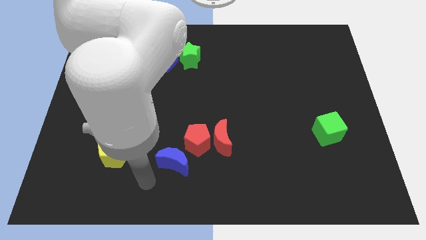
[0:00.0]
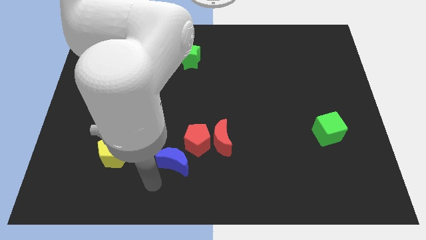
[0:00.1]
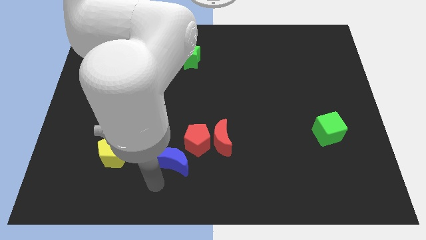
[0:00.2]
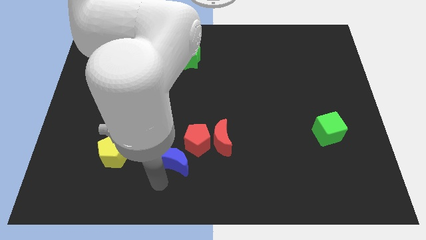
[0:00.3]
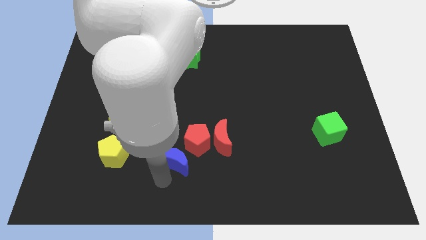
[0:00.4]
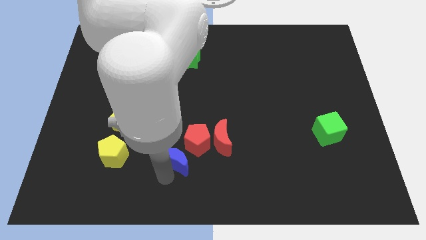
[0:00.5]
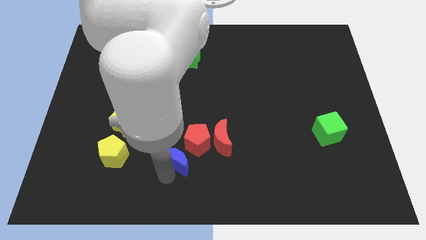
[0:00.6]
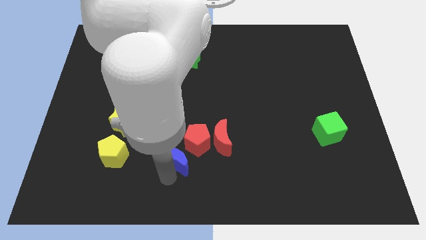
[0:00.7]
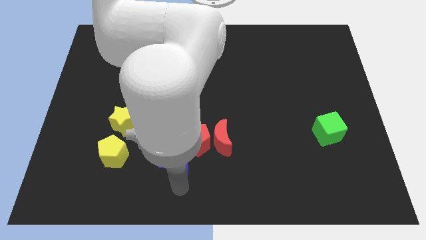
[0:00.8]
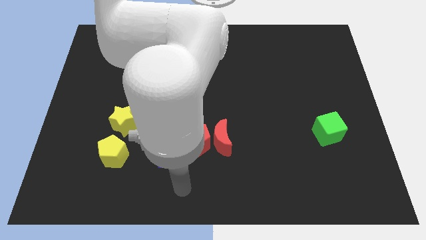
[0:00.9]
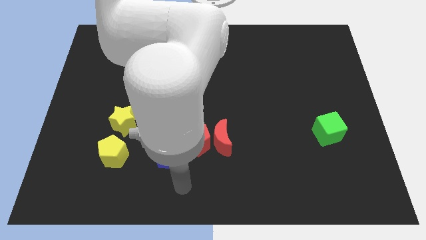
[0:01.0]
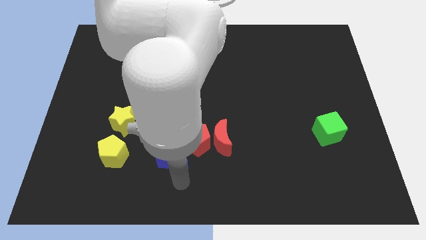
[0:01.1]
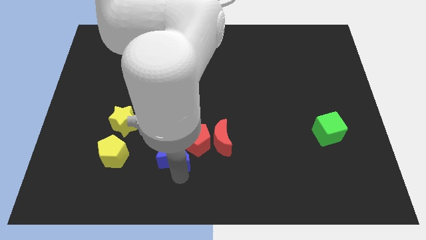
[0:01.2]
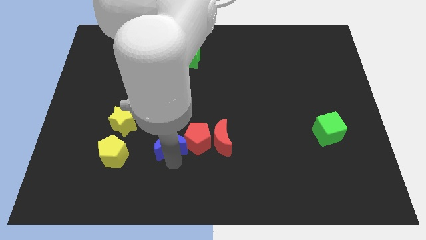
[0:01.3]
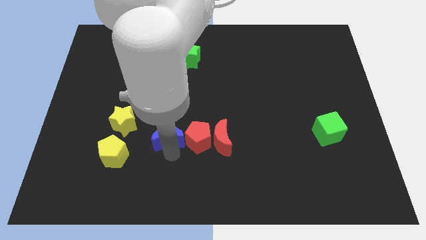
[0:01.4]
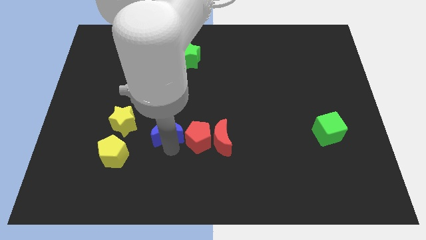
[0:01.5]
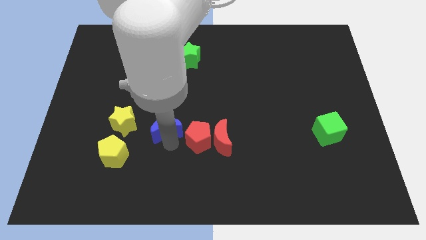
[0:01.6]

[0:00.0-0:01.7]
place the blue moon to the left side of red pentagon

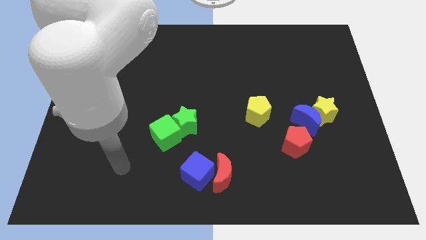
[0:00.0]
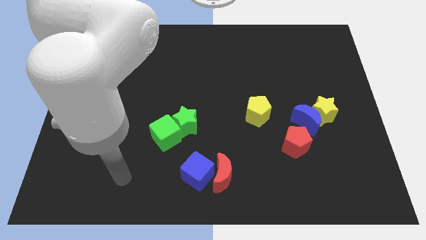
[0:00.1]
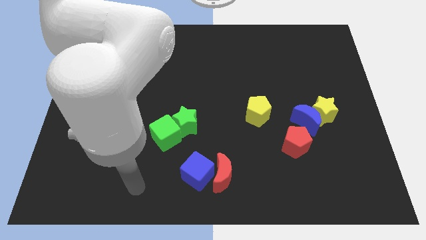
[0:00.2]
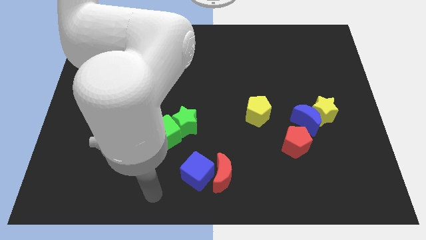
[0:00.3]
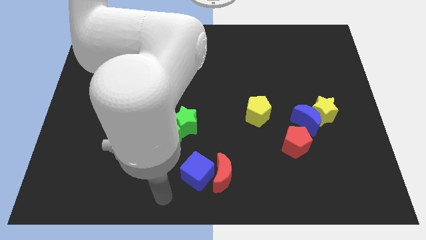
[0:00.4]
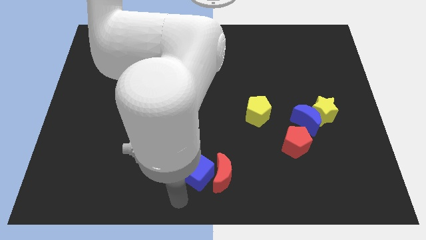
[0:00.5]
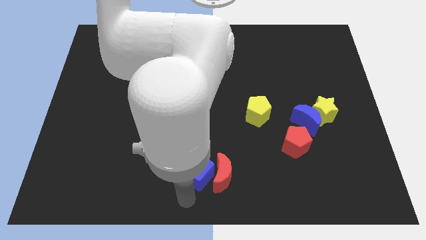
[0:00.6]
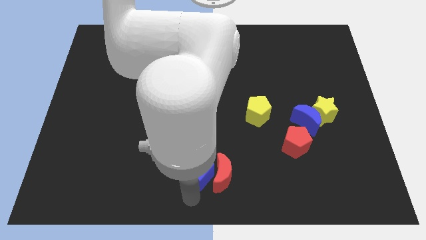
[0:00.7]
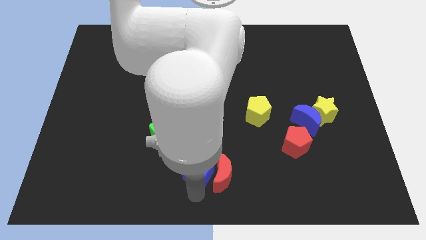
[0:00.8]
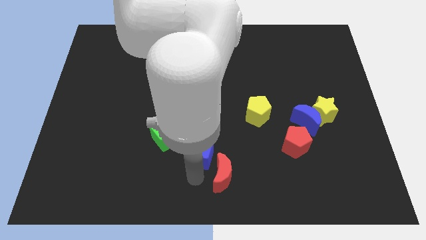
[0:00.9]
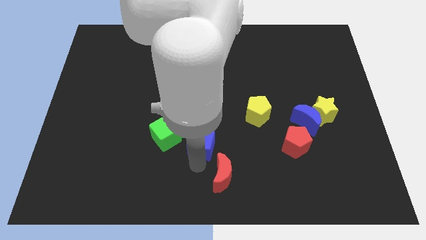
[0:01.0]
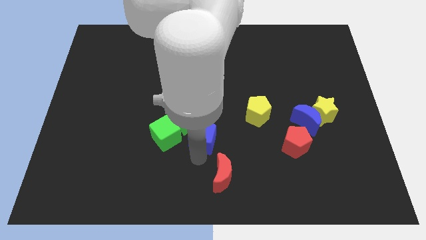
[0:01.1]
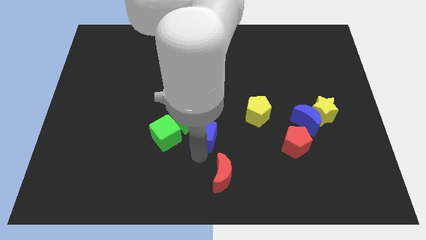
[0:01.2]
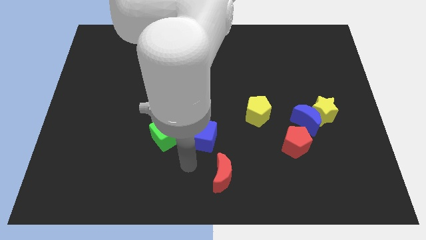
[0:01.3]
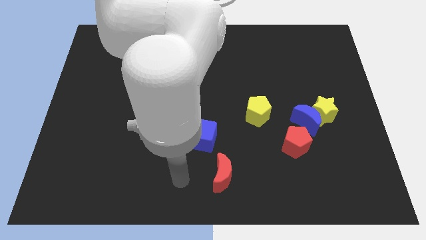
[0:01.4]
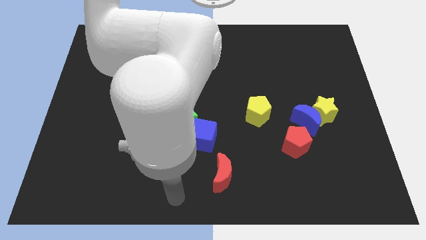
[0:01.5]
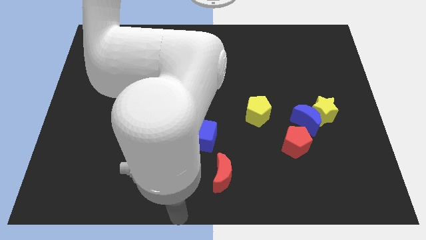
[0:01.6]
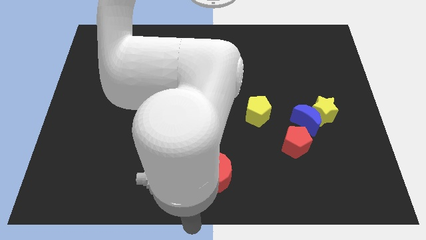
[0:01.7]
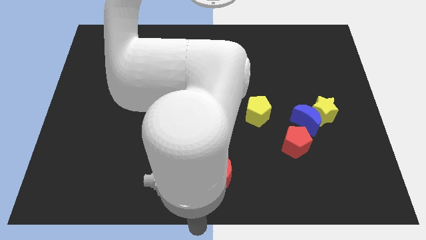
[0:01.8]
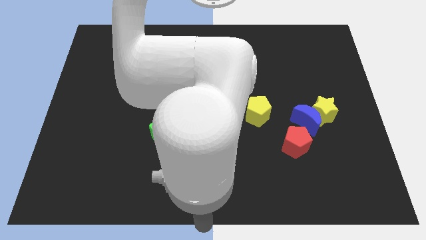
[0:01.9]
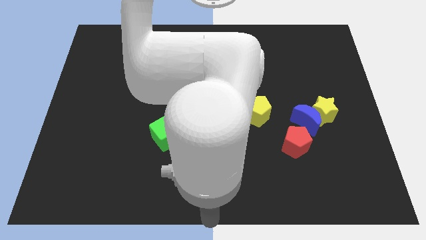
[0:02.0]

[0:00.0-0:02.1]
separate the blue cube from the red moon

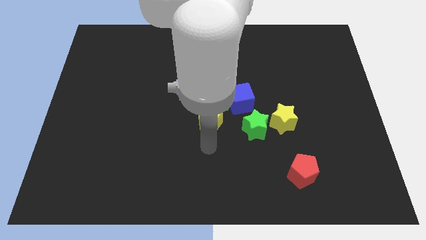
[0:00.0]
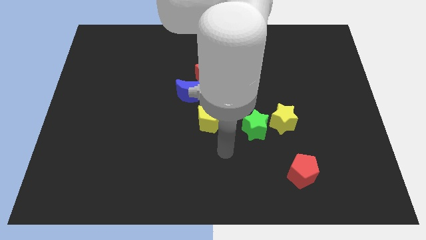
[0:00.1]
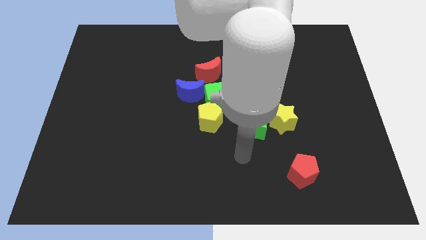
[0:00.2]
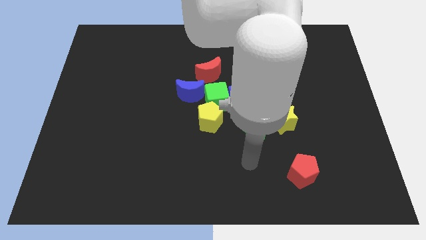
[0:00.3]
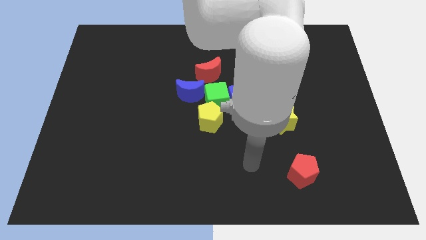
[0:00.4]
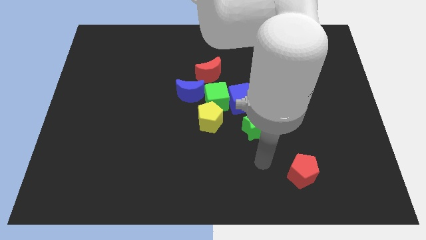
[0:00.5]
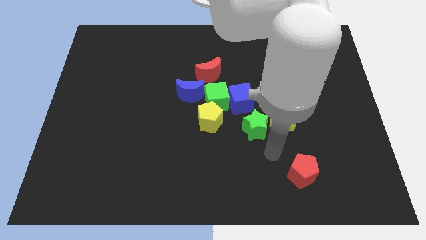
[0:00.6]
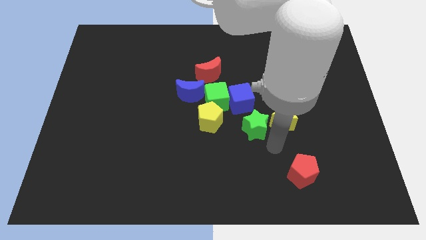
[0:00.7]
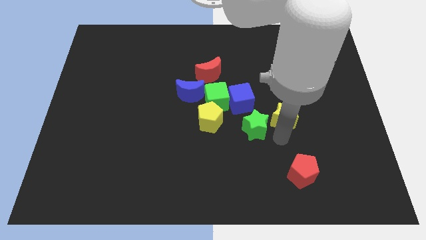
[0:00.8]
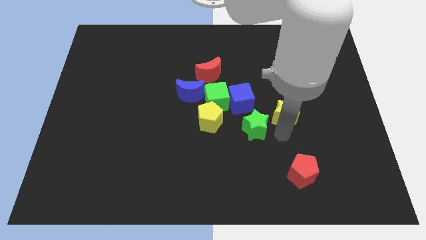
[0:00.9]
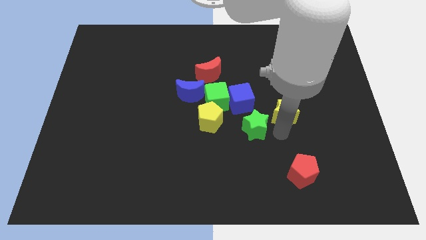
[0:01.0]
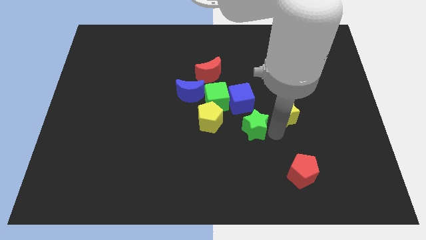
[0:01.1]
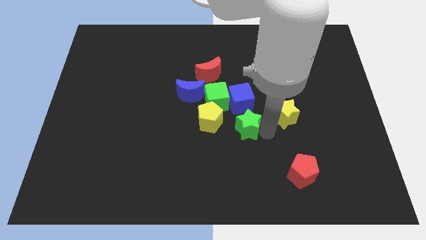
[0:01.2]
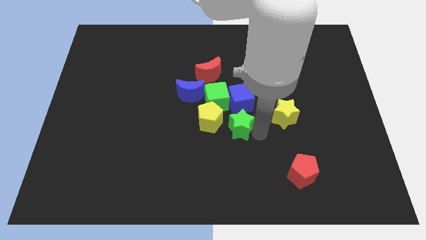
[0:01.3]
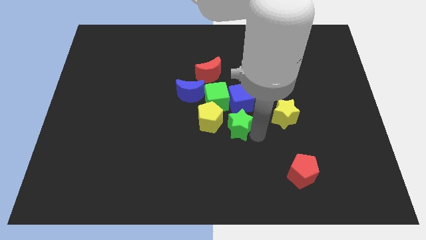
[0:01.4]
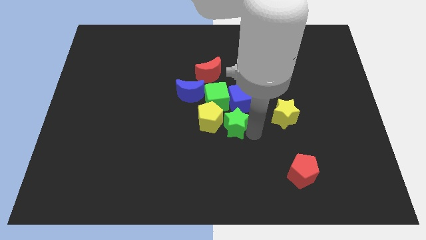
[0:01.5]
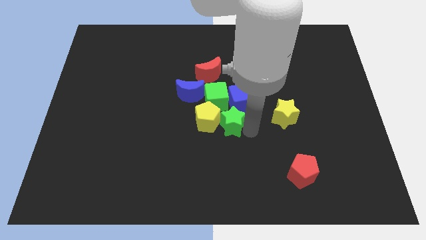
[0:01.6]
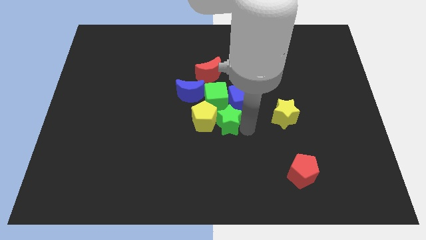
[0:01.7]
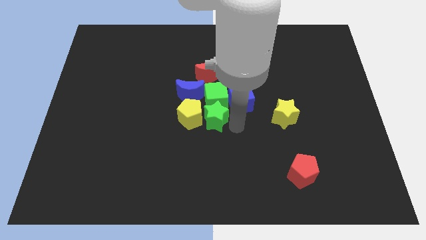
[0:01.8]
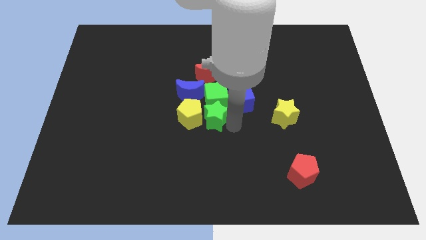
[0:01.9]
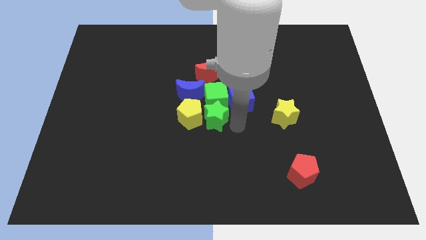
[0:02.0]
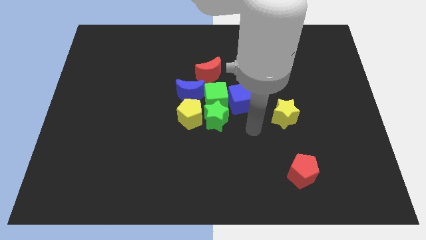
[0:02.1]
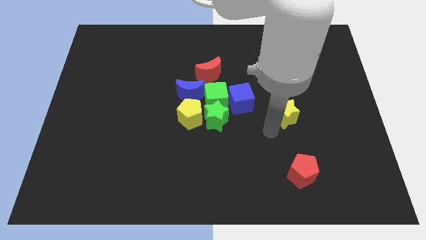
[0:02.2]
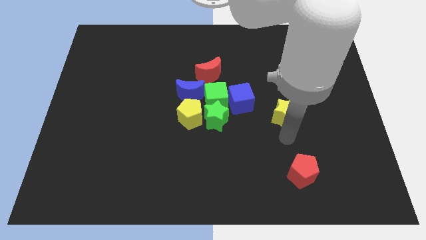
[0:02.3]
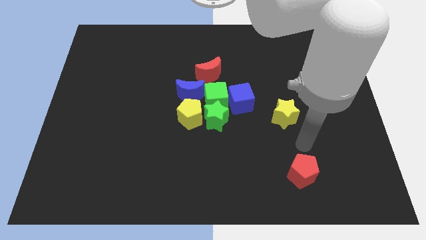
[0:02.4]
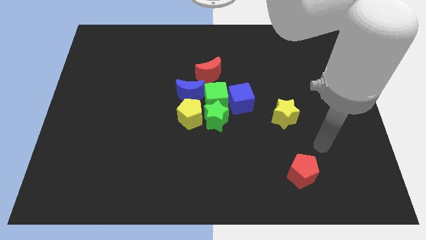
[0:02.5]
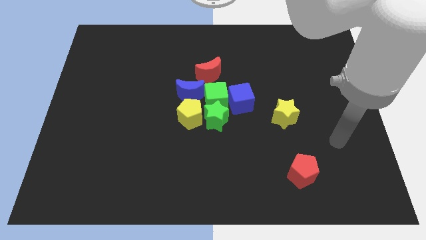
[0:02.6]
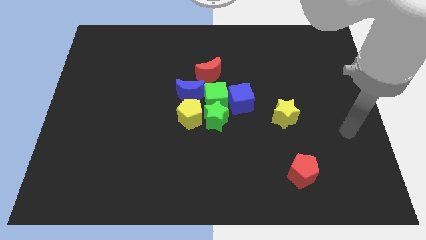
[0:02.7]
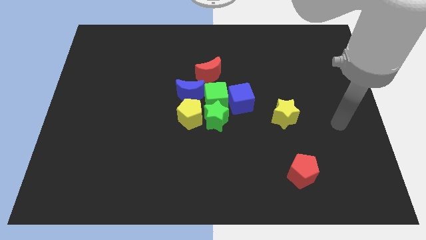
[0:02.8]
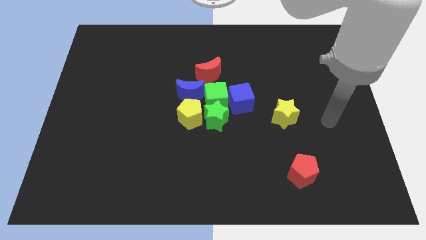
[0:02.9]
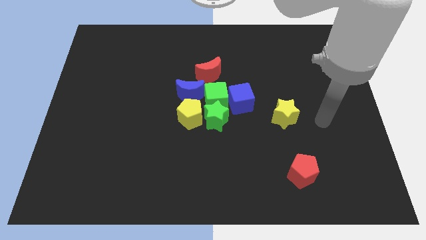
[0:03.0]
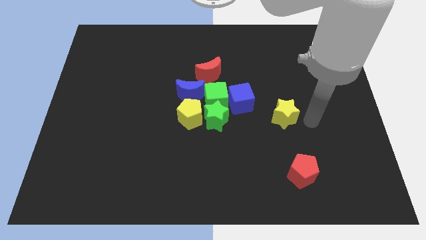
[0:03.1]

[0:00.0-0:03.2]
push the green star to the bottom of the green cube

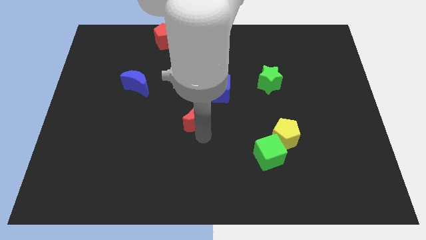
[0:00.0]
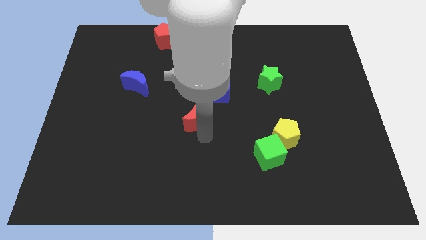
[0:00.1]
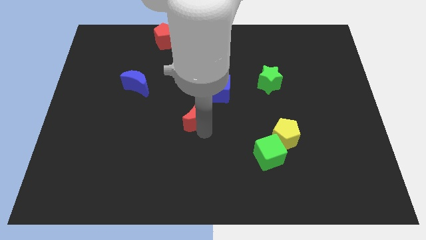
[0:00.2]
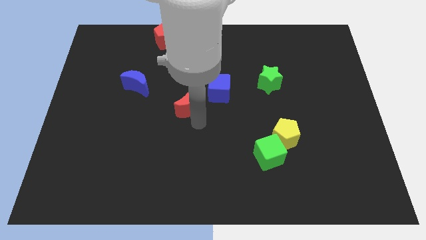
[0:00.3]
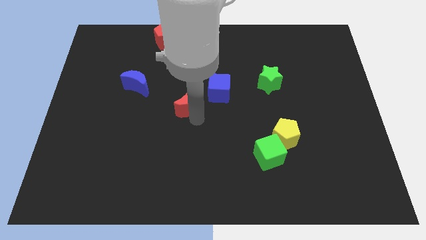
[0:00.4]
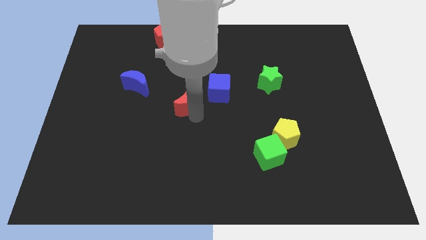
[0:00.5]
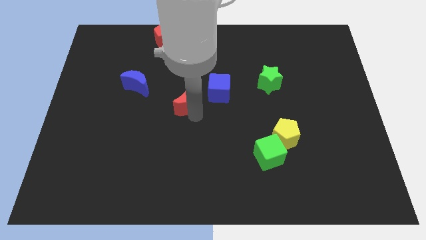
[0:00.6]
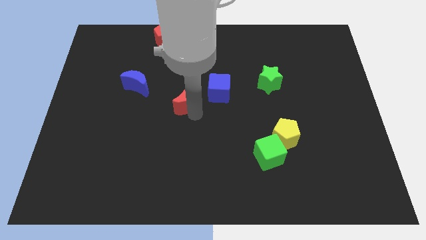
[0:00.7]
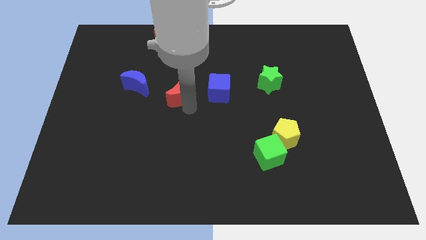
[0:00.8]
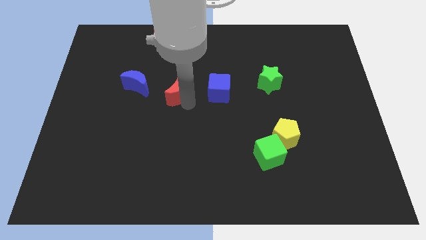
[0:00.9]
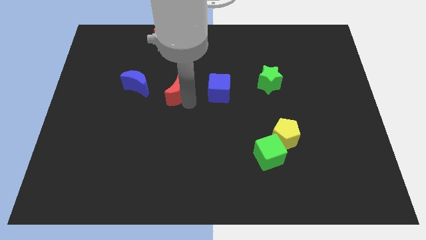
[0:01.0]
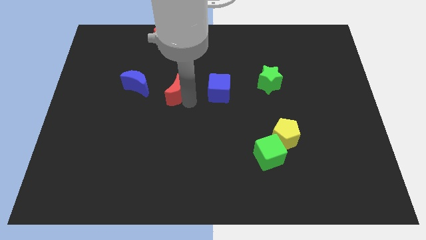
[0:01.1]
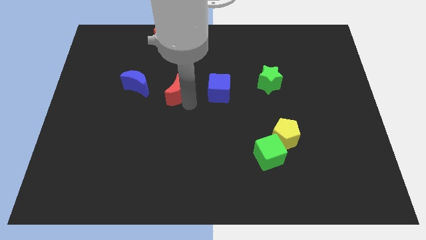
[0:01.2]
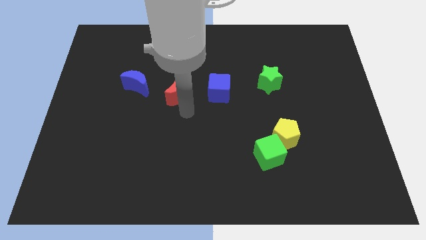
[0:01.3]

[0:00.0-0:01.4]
place the red moon in between blue blocks

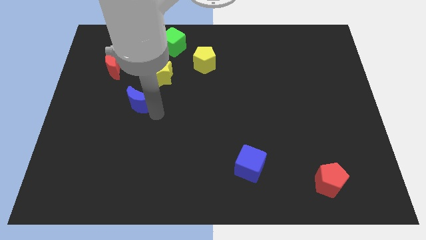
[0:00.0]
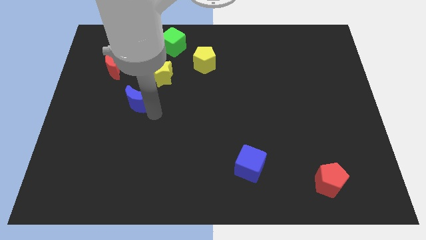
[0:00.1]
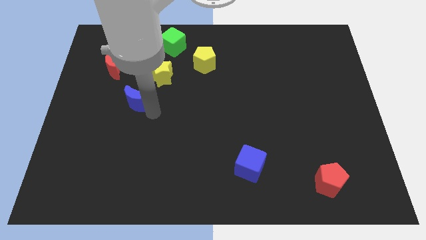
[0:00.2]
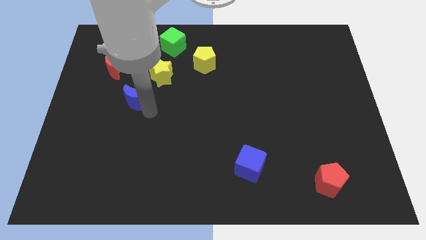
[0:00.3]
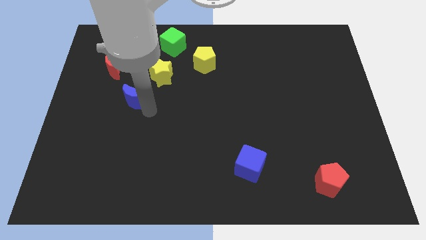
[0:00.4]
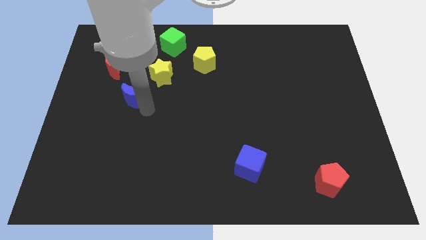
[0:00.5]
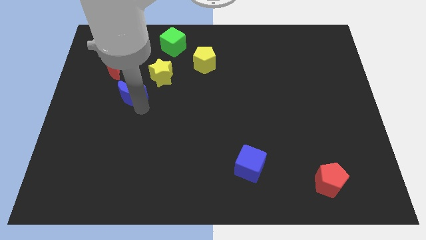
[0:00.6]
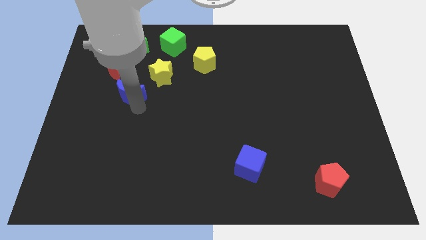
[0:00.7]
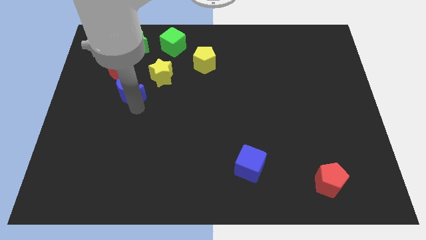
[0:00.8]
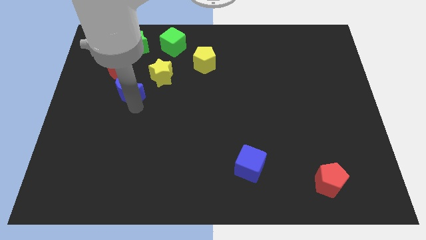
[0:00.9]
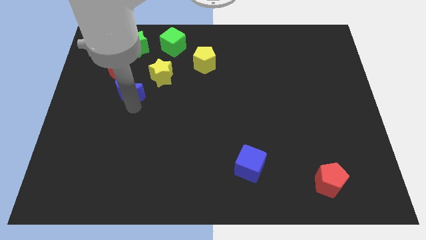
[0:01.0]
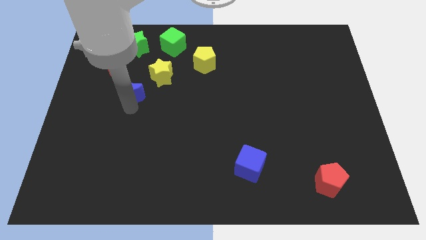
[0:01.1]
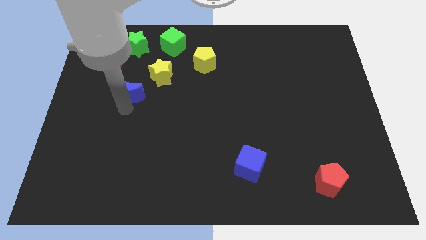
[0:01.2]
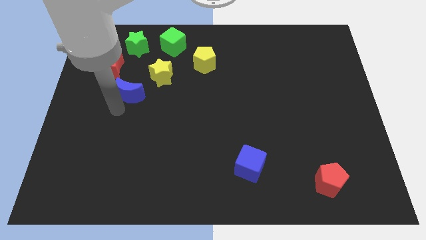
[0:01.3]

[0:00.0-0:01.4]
move the blue crescent below the red crescent
